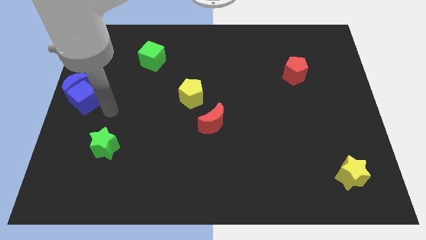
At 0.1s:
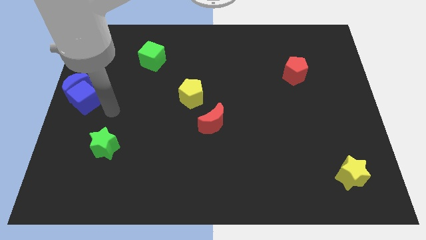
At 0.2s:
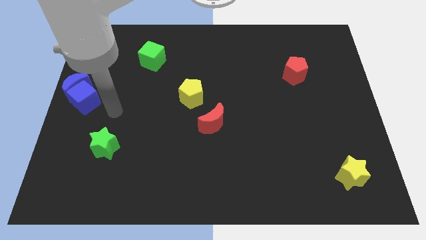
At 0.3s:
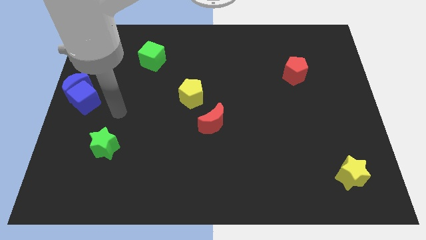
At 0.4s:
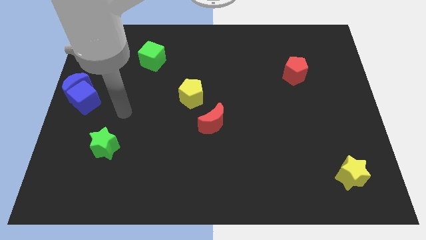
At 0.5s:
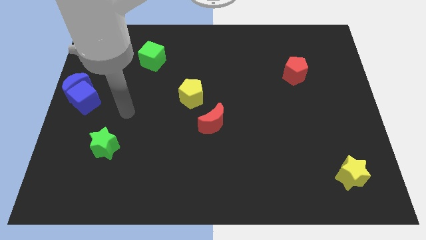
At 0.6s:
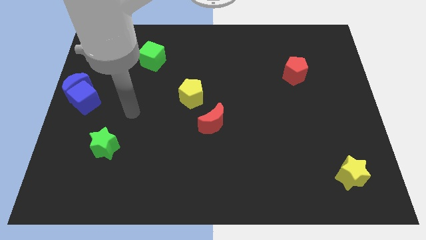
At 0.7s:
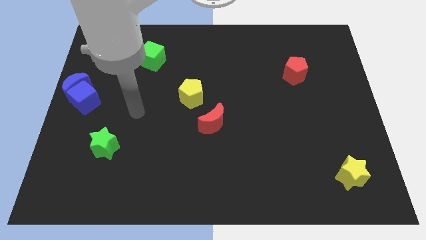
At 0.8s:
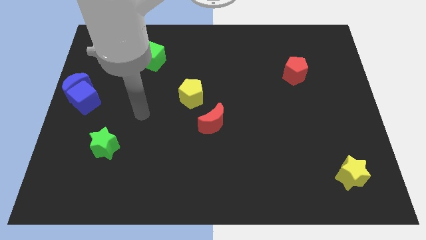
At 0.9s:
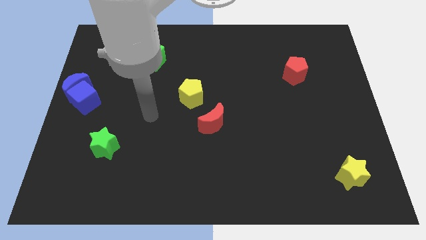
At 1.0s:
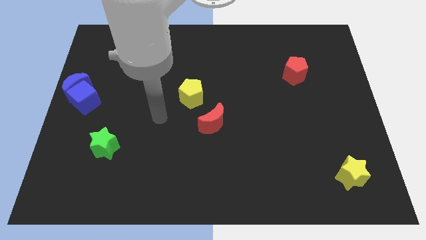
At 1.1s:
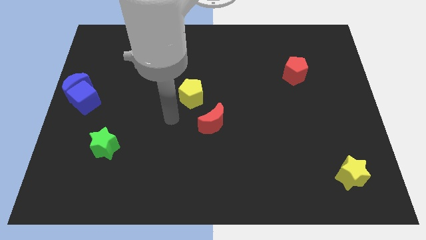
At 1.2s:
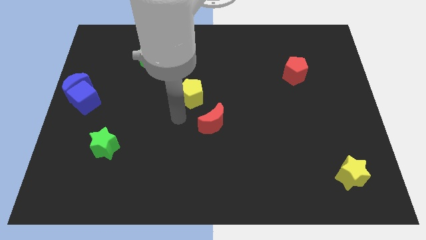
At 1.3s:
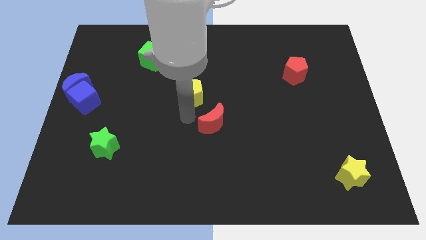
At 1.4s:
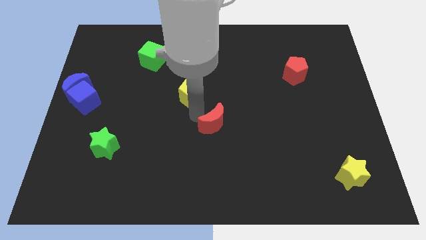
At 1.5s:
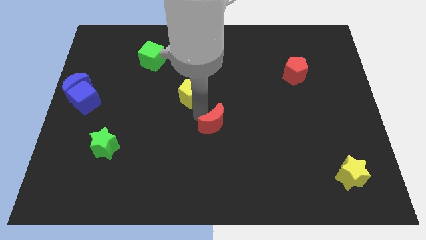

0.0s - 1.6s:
place the arm diagonal to the red moon

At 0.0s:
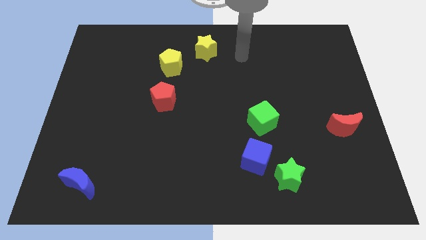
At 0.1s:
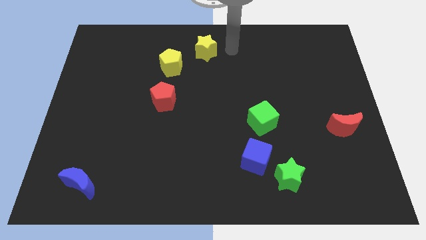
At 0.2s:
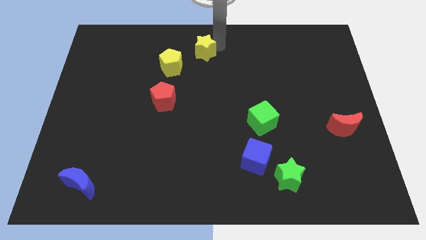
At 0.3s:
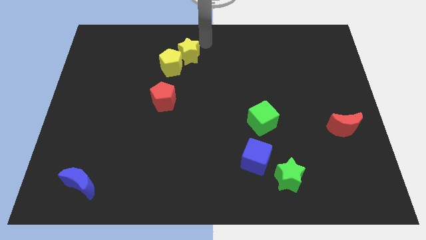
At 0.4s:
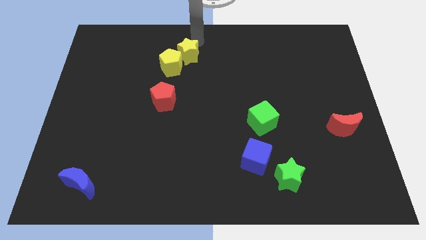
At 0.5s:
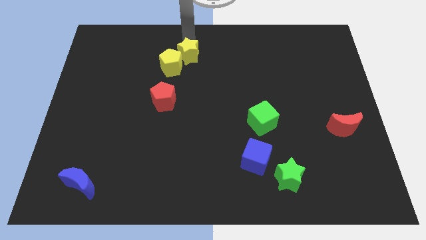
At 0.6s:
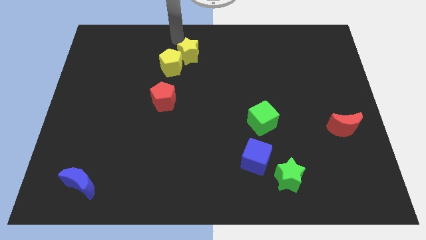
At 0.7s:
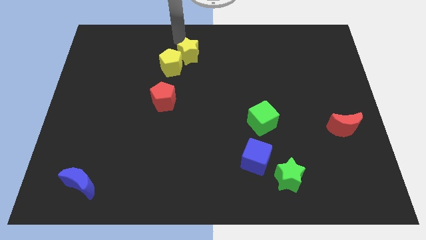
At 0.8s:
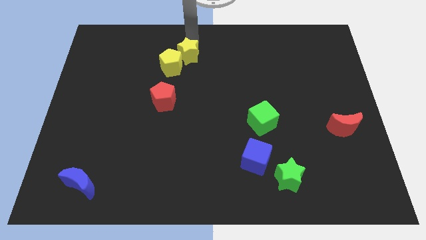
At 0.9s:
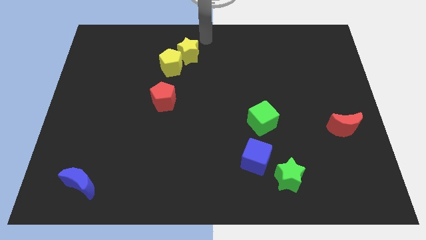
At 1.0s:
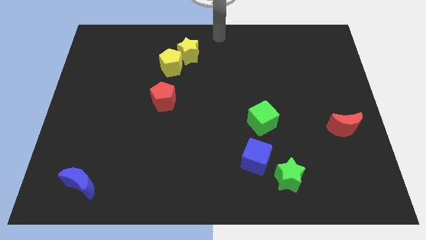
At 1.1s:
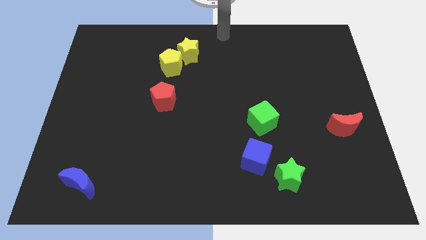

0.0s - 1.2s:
move yellow star into yellow pentagon

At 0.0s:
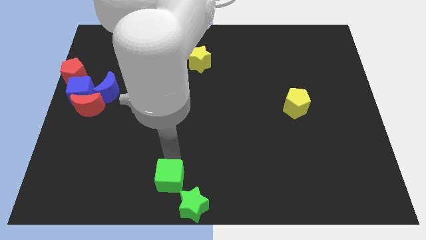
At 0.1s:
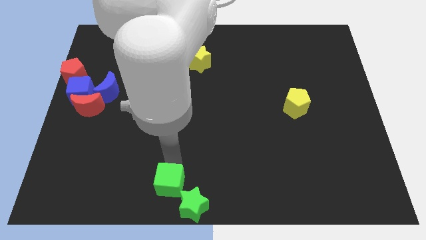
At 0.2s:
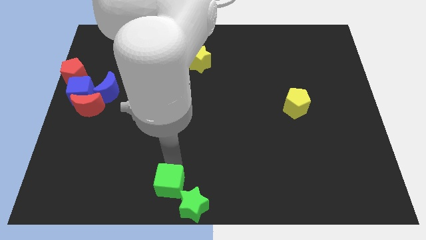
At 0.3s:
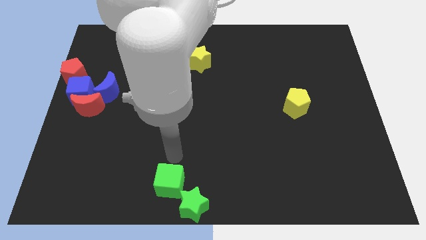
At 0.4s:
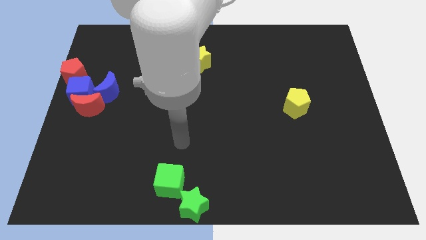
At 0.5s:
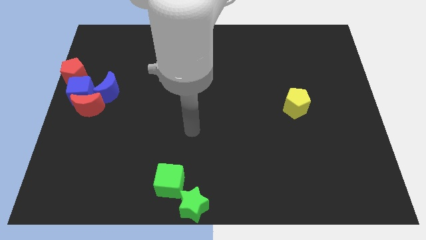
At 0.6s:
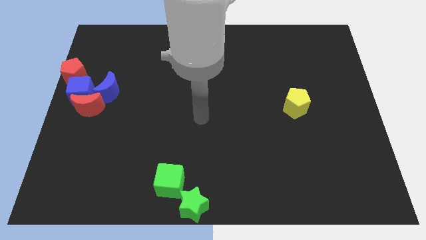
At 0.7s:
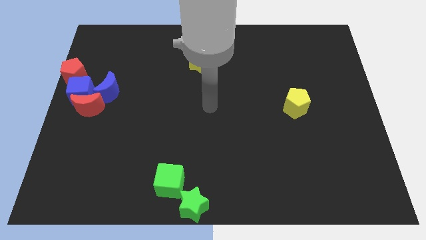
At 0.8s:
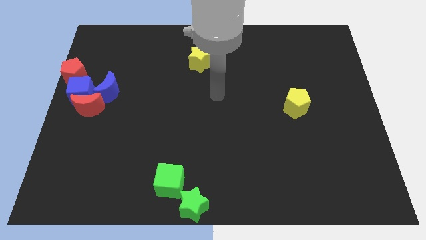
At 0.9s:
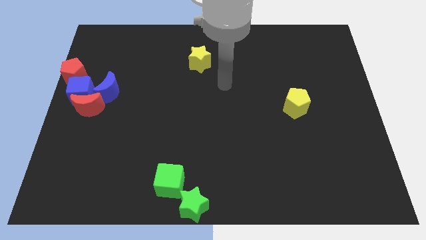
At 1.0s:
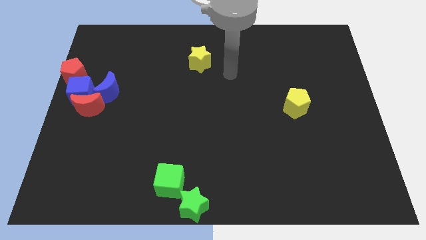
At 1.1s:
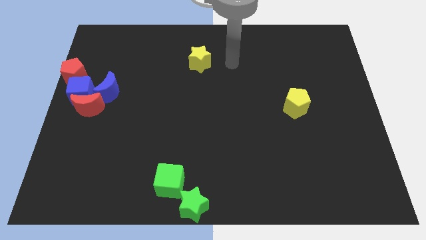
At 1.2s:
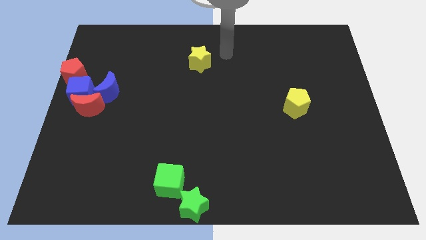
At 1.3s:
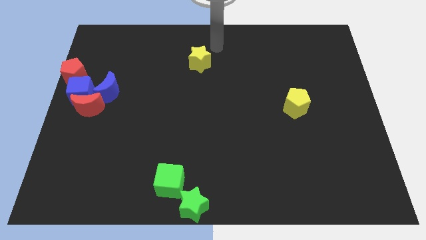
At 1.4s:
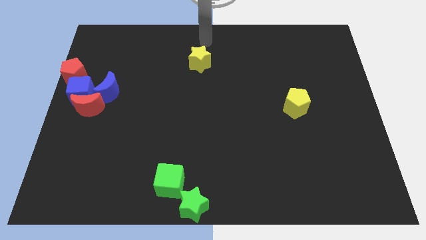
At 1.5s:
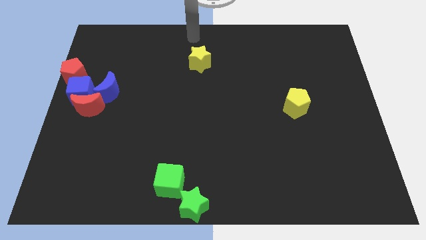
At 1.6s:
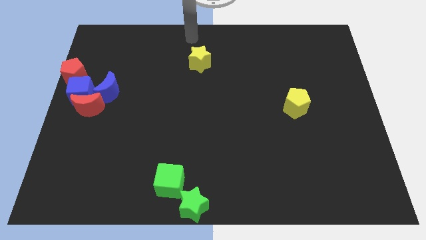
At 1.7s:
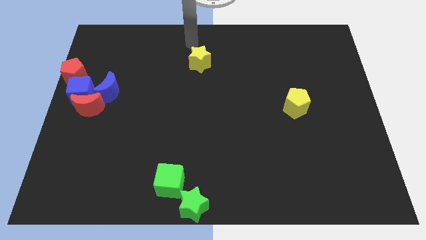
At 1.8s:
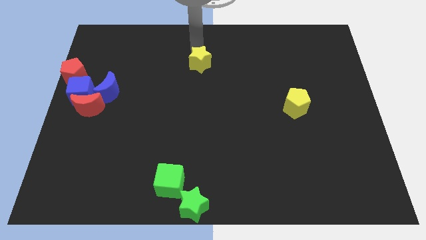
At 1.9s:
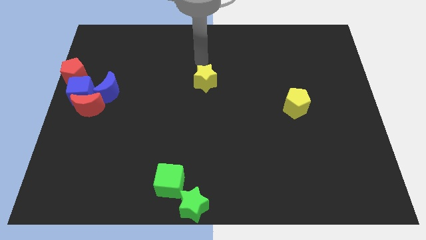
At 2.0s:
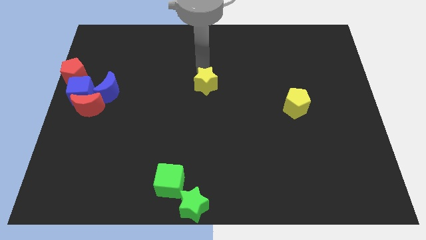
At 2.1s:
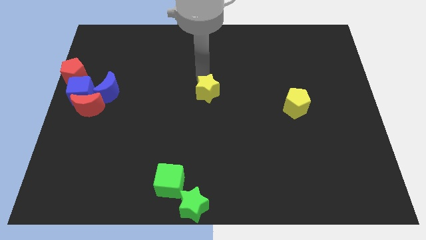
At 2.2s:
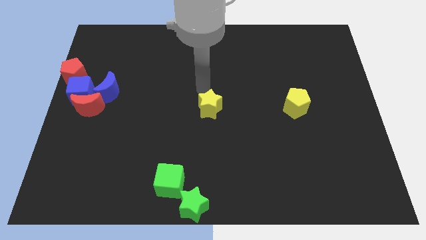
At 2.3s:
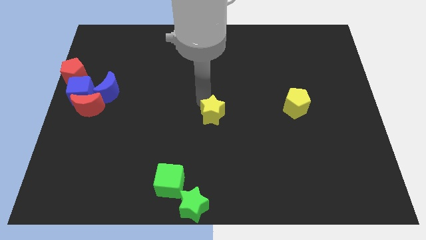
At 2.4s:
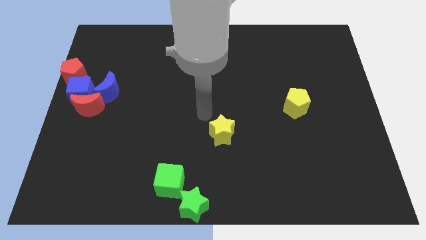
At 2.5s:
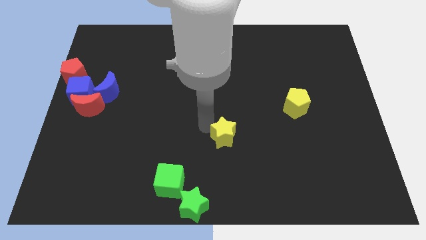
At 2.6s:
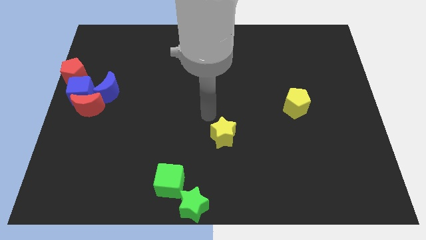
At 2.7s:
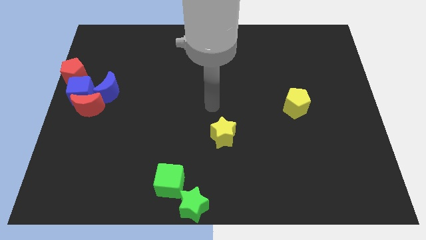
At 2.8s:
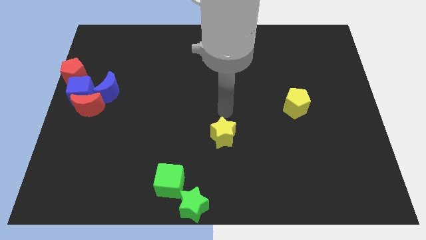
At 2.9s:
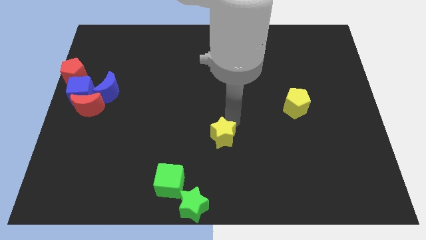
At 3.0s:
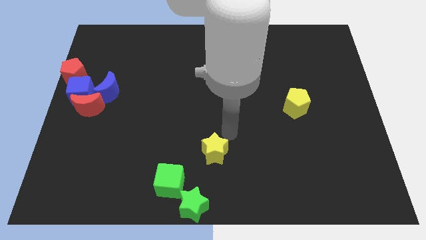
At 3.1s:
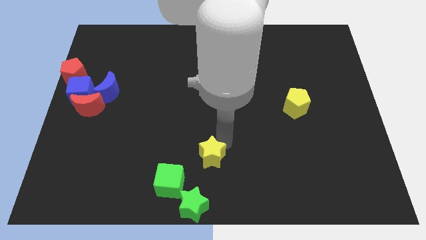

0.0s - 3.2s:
push the yellow star towards the bottom center of the board

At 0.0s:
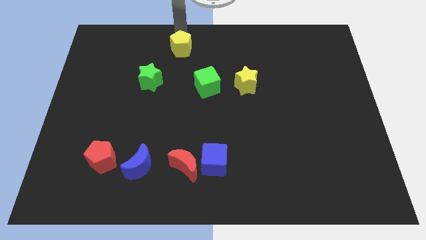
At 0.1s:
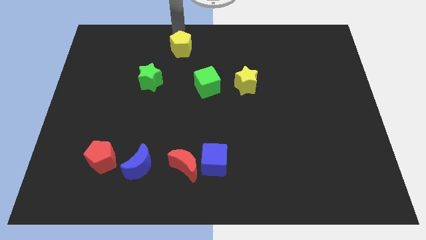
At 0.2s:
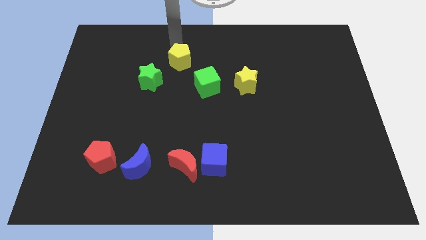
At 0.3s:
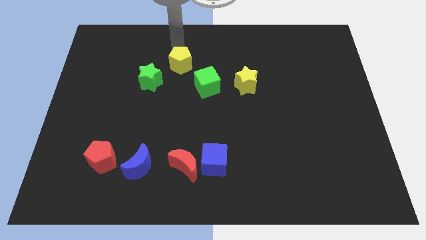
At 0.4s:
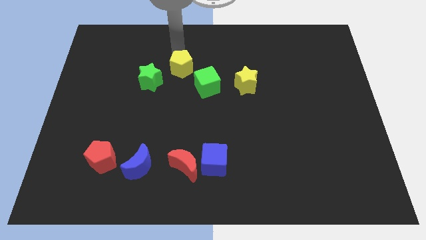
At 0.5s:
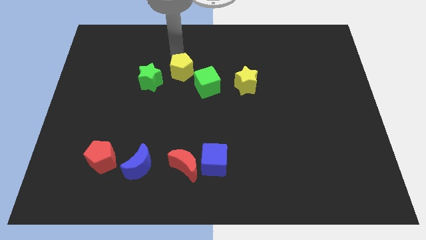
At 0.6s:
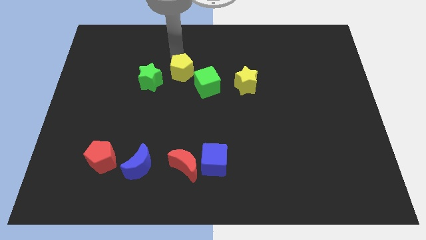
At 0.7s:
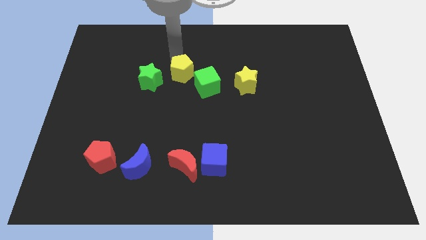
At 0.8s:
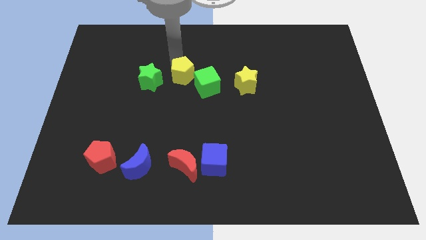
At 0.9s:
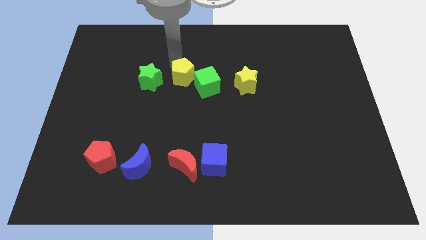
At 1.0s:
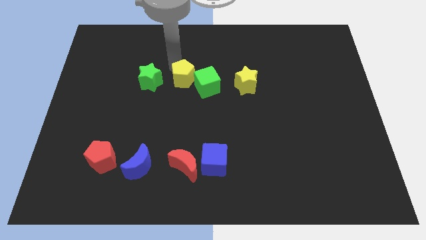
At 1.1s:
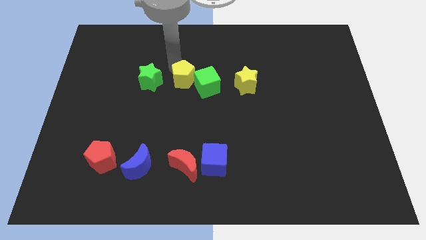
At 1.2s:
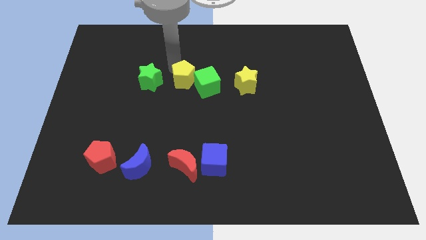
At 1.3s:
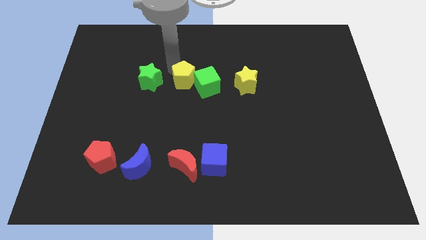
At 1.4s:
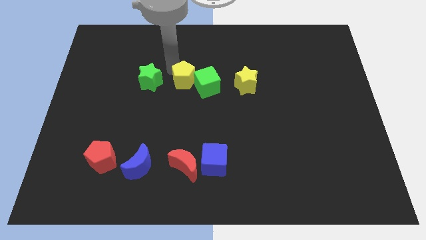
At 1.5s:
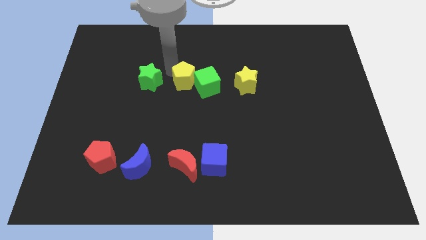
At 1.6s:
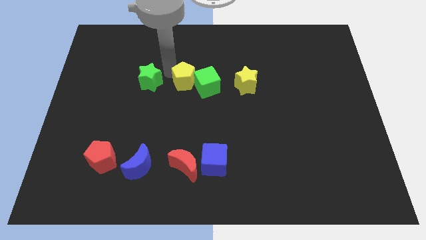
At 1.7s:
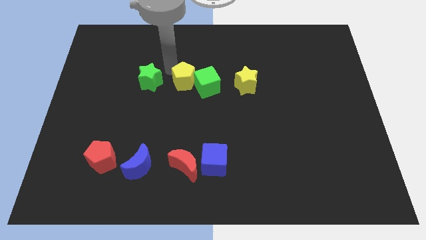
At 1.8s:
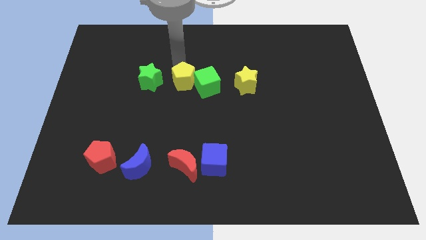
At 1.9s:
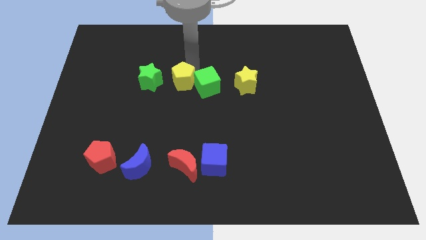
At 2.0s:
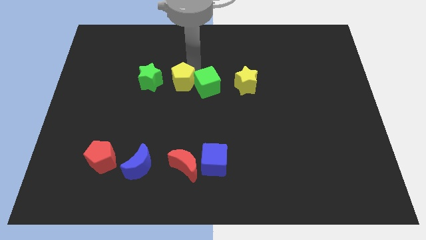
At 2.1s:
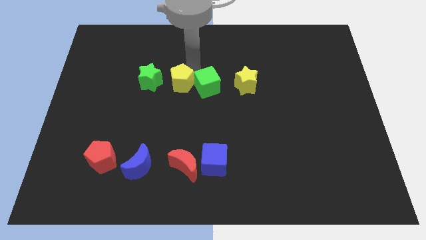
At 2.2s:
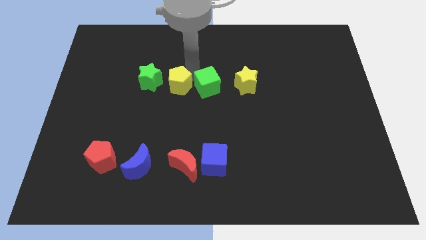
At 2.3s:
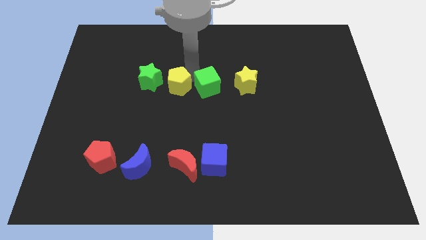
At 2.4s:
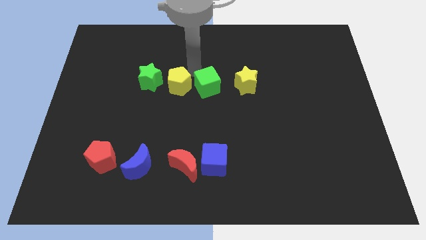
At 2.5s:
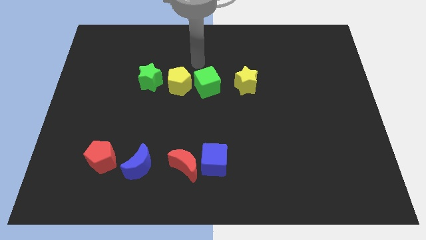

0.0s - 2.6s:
place yellow pentagon in between green star and green cube

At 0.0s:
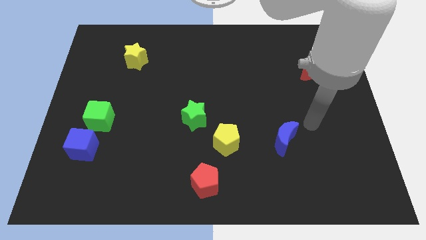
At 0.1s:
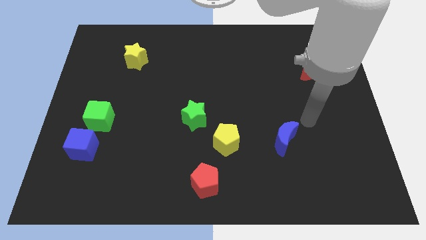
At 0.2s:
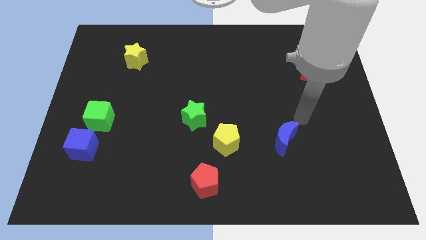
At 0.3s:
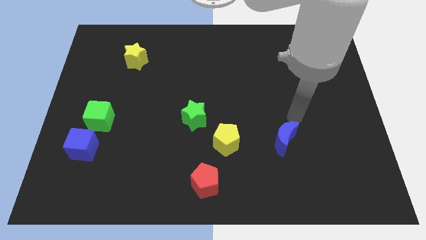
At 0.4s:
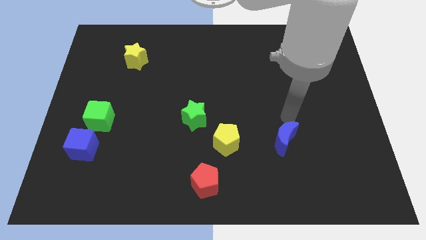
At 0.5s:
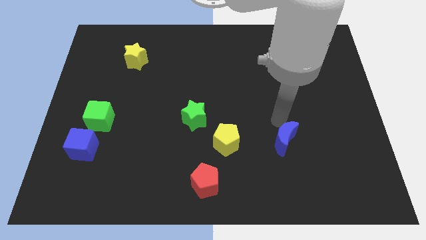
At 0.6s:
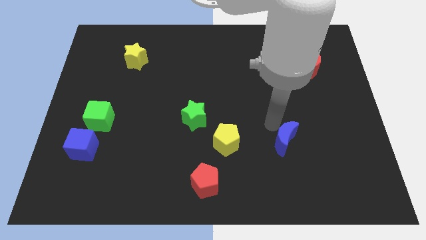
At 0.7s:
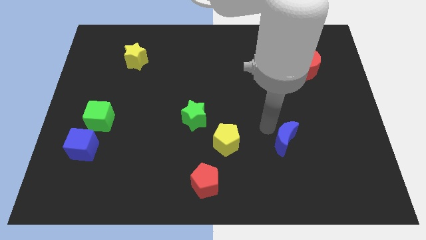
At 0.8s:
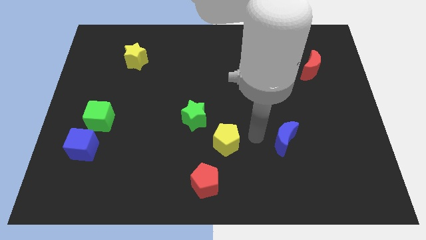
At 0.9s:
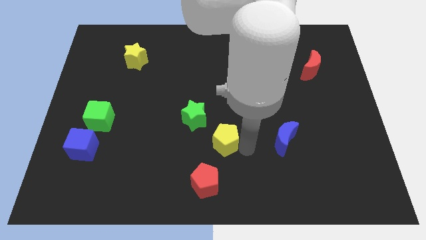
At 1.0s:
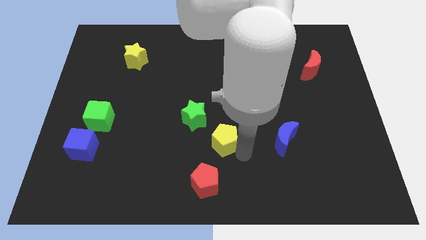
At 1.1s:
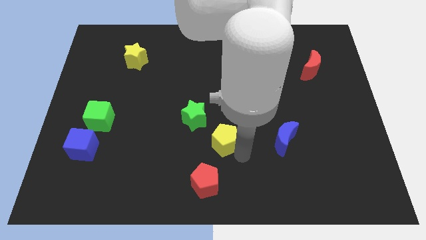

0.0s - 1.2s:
move arm close to the yellow pentagon
